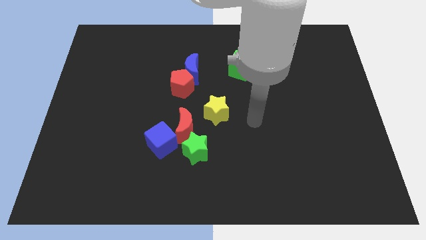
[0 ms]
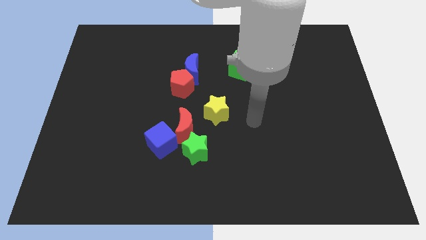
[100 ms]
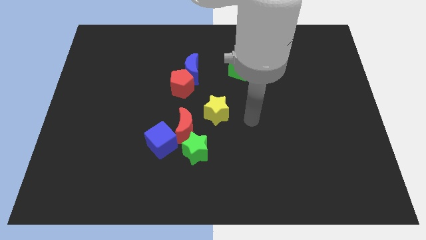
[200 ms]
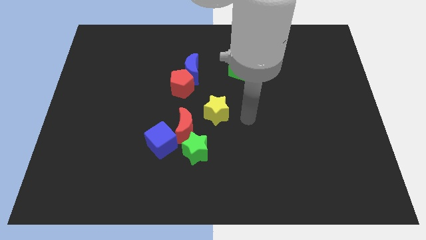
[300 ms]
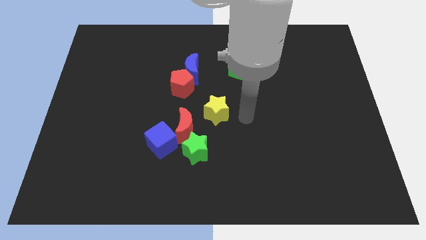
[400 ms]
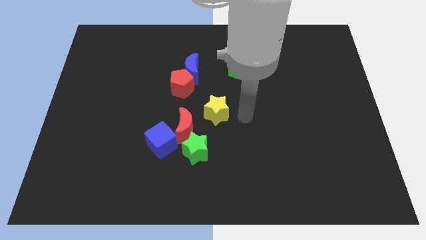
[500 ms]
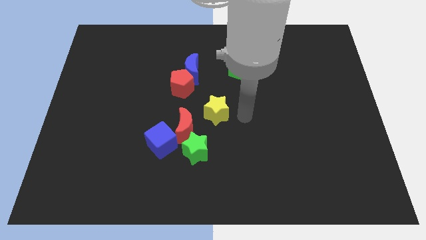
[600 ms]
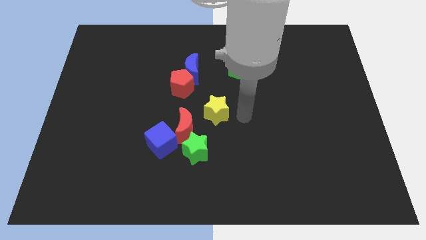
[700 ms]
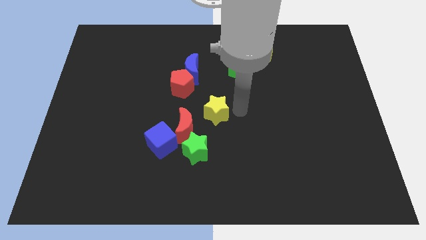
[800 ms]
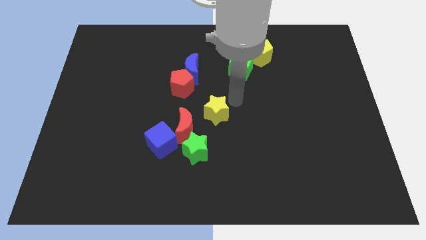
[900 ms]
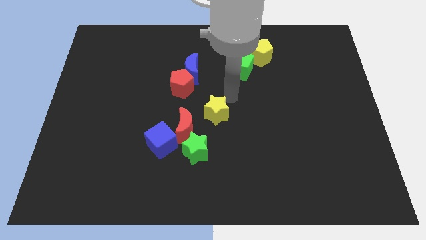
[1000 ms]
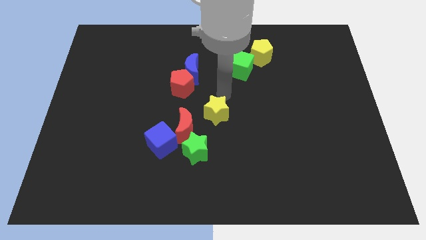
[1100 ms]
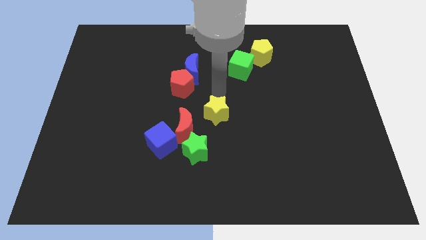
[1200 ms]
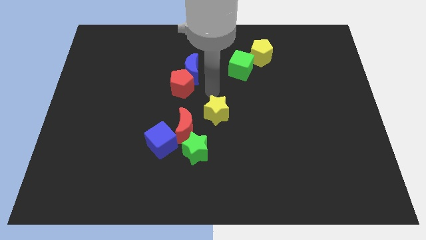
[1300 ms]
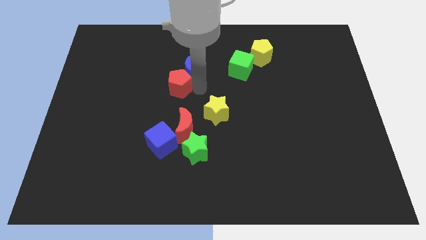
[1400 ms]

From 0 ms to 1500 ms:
tap the red pentagon

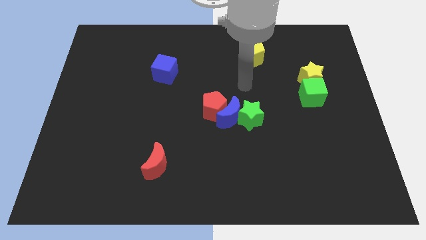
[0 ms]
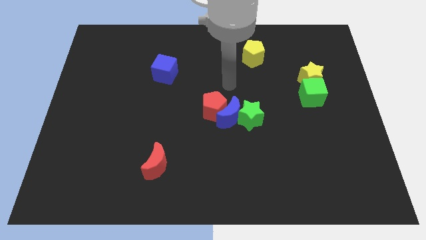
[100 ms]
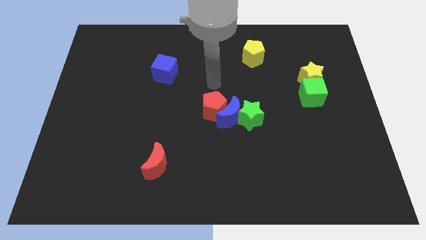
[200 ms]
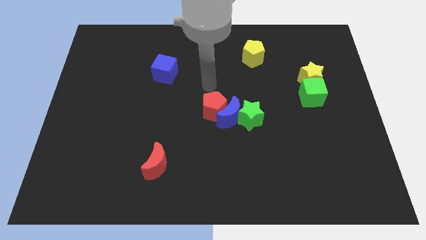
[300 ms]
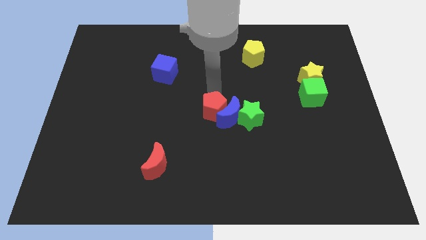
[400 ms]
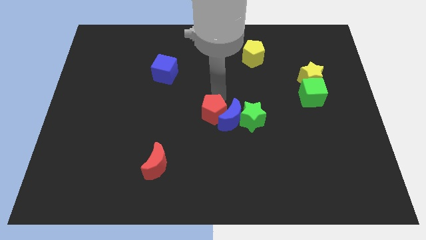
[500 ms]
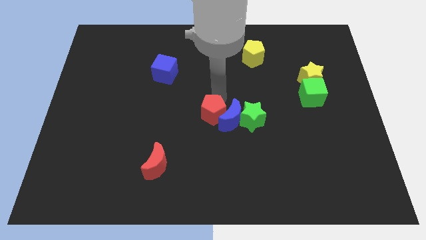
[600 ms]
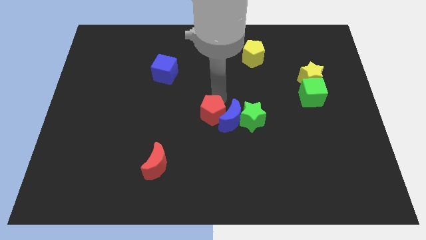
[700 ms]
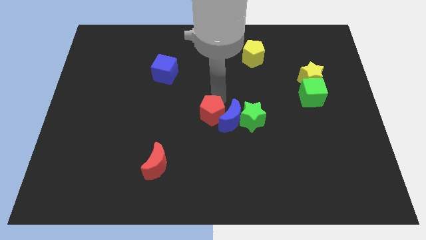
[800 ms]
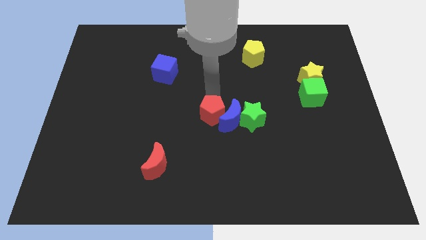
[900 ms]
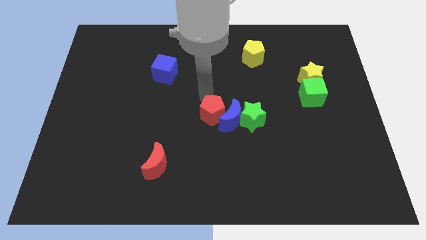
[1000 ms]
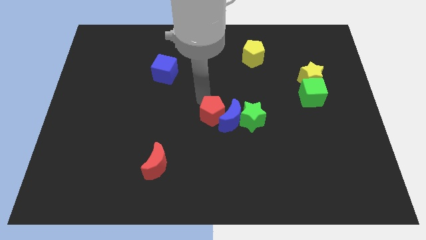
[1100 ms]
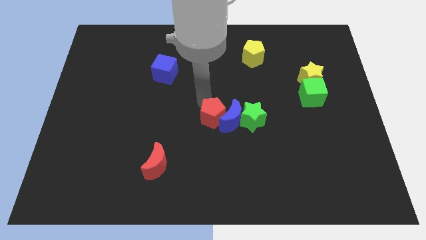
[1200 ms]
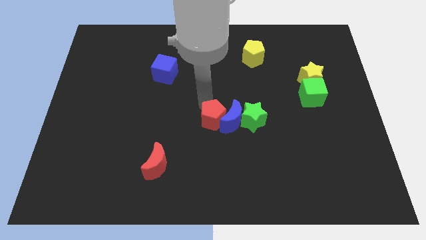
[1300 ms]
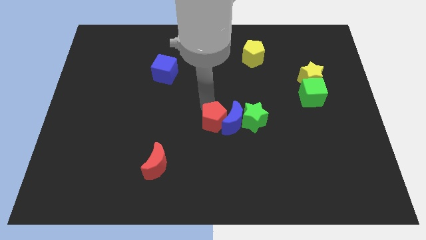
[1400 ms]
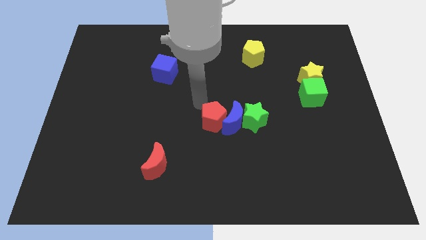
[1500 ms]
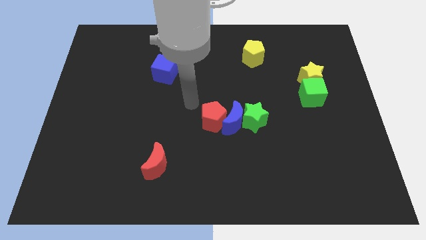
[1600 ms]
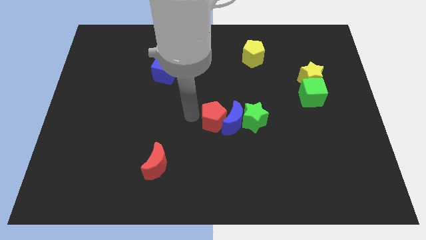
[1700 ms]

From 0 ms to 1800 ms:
move the red pentagon towards down

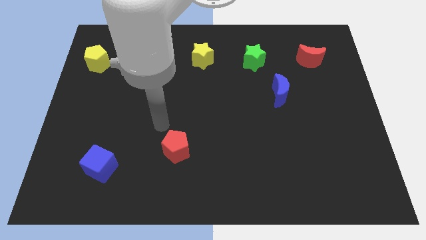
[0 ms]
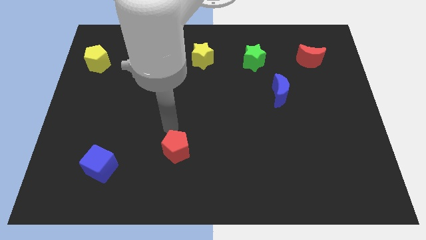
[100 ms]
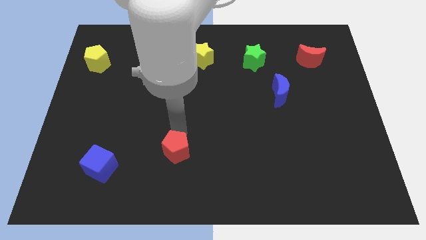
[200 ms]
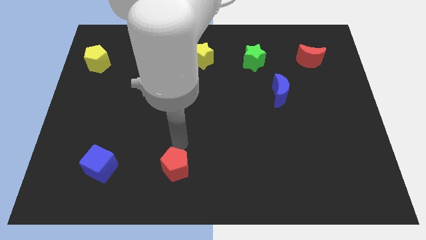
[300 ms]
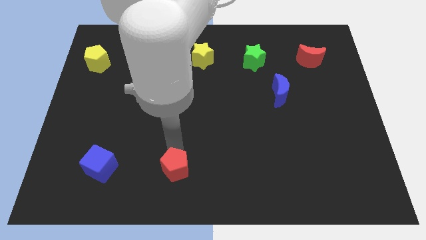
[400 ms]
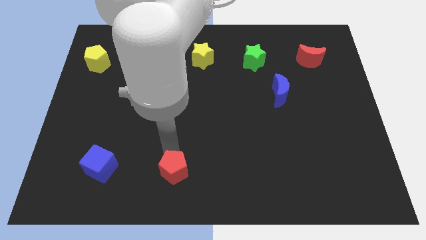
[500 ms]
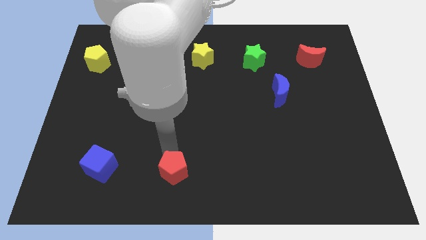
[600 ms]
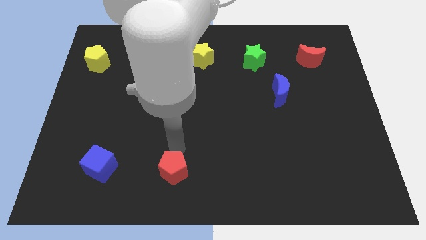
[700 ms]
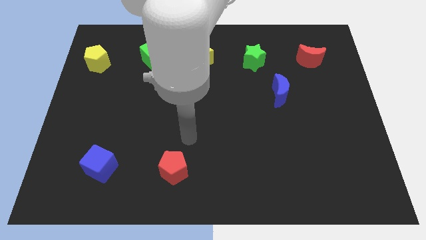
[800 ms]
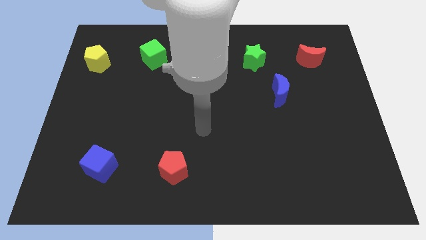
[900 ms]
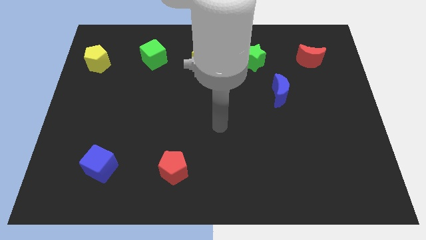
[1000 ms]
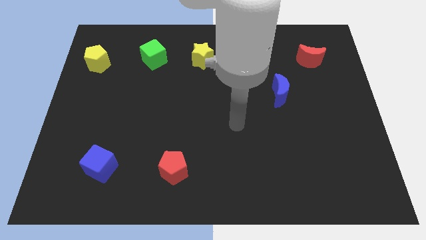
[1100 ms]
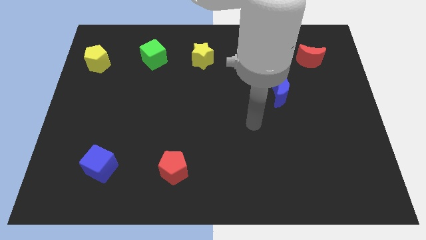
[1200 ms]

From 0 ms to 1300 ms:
slide the red pentagon to the right of the blue cube

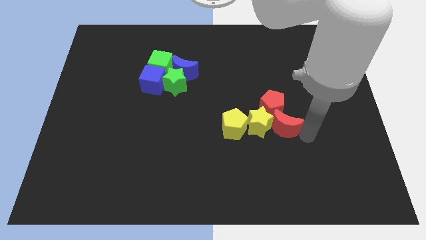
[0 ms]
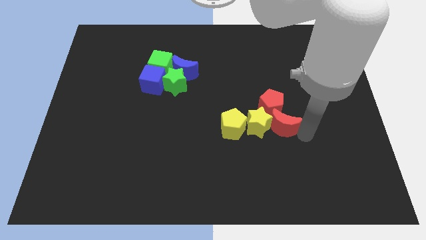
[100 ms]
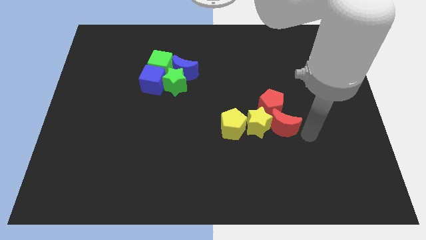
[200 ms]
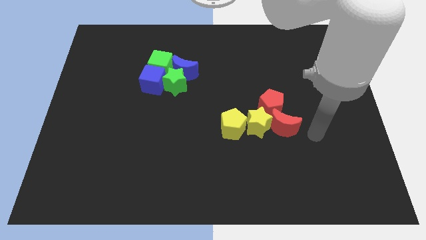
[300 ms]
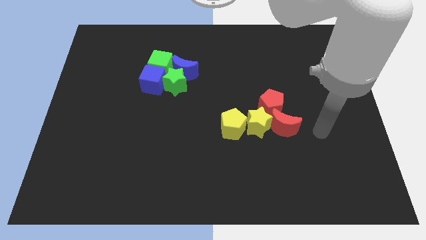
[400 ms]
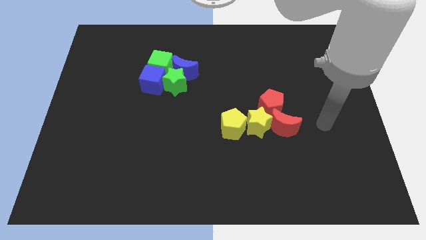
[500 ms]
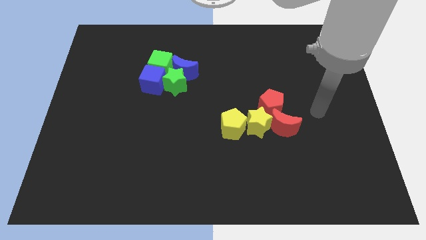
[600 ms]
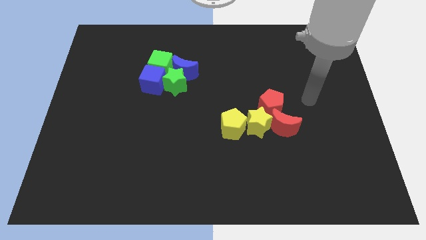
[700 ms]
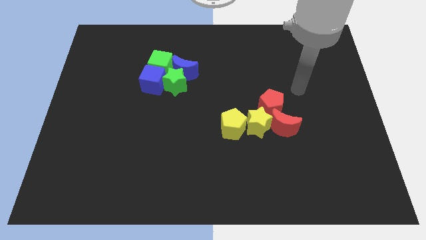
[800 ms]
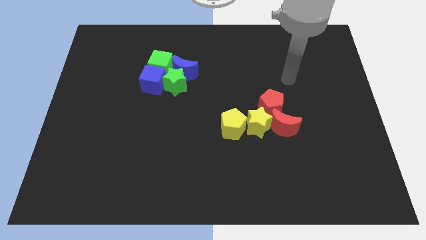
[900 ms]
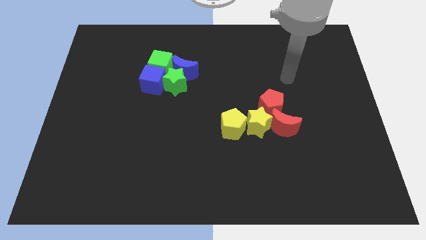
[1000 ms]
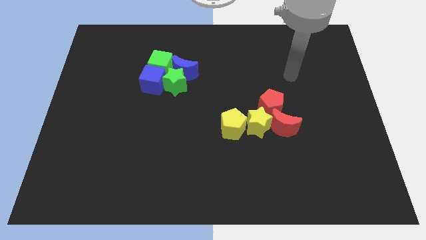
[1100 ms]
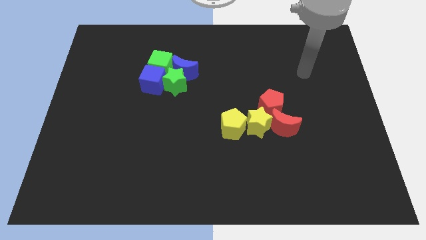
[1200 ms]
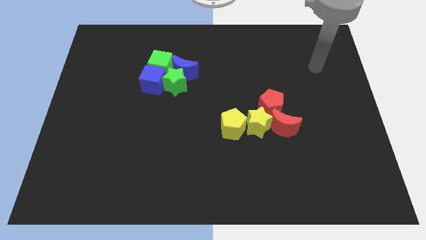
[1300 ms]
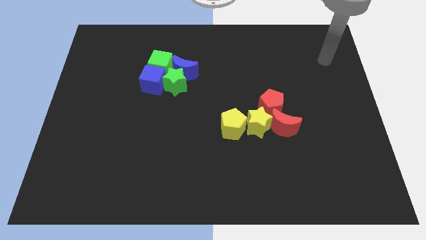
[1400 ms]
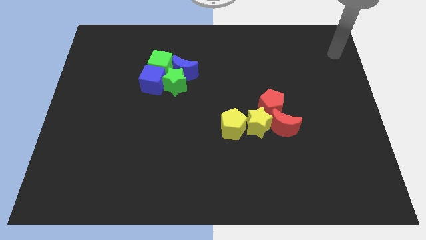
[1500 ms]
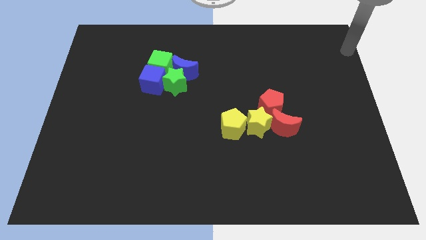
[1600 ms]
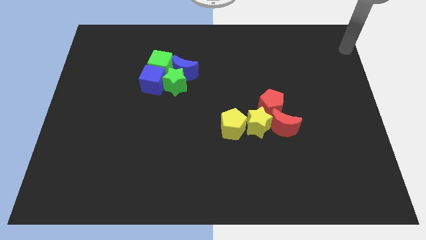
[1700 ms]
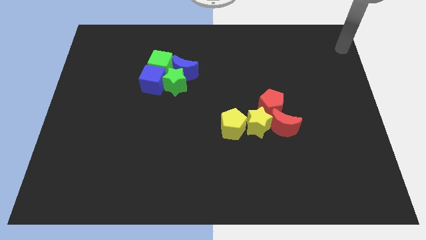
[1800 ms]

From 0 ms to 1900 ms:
move your arm towards the top right

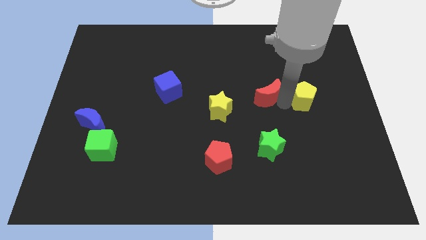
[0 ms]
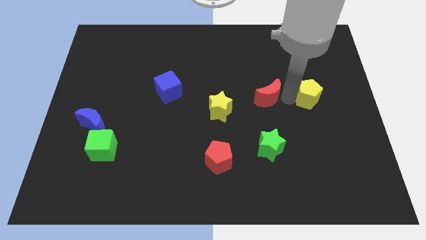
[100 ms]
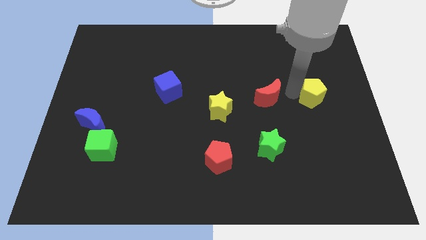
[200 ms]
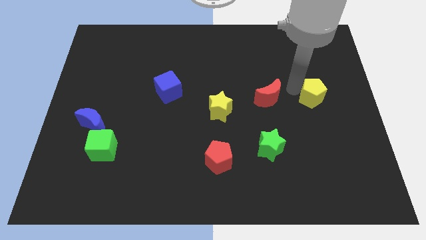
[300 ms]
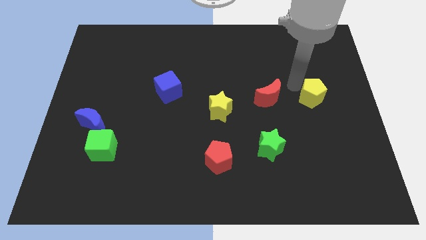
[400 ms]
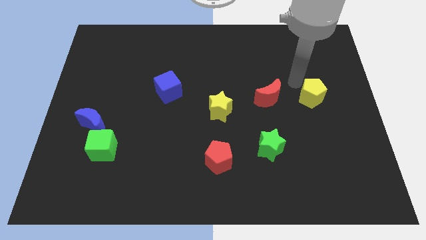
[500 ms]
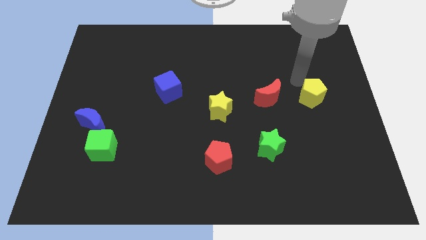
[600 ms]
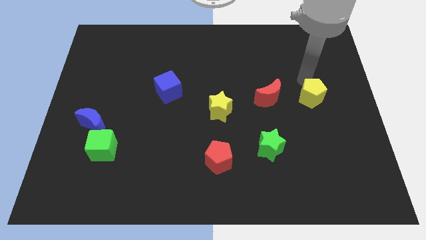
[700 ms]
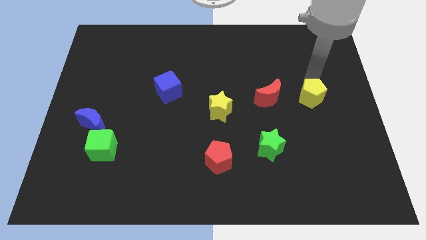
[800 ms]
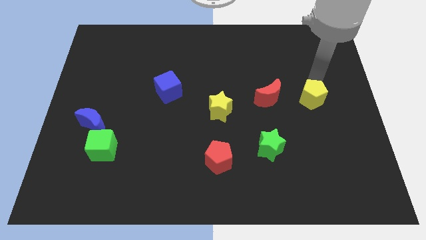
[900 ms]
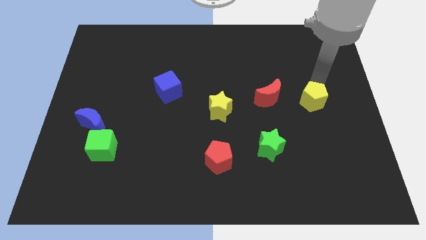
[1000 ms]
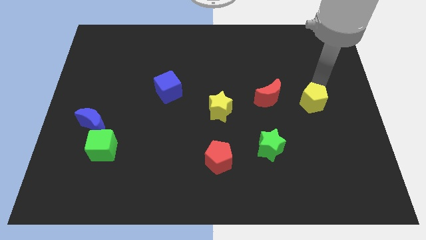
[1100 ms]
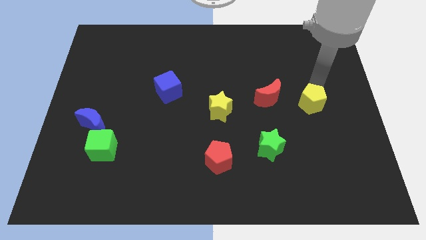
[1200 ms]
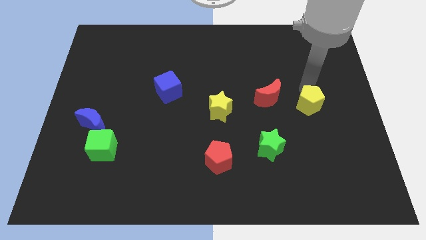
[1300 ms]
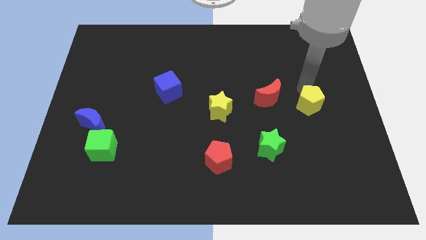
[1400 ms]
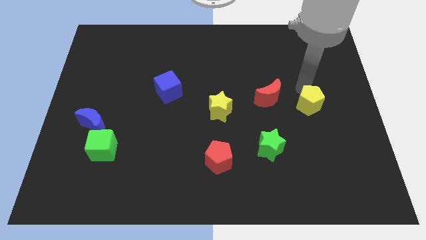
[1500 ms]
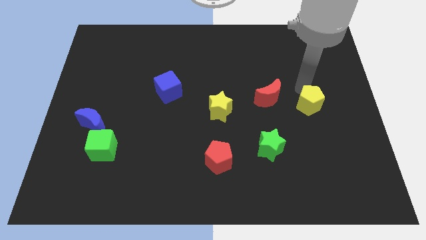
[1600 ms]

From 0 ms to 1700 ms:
push the yellow pentagon towards the right of the board

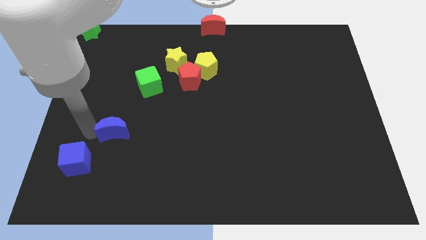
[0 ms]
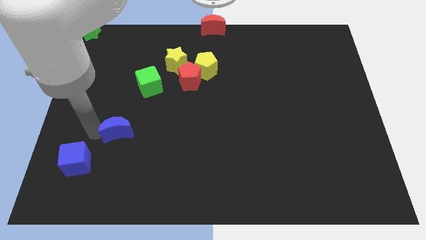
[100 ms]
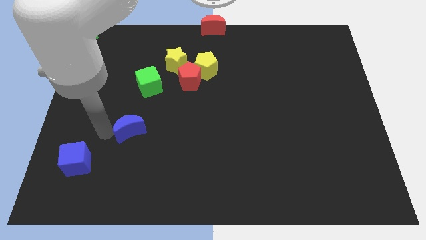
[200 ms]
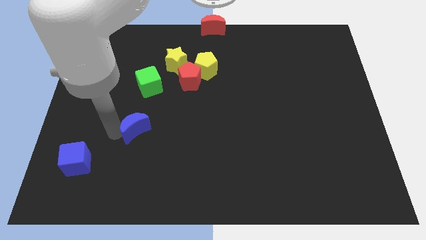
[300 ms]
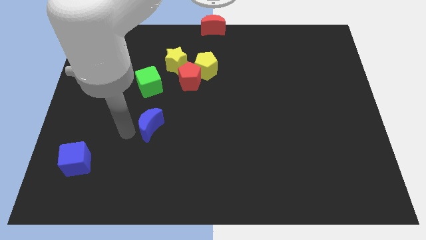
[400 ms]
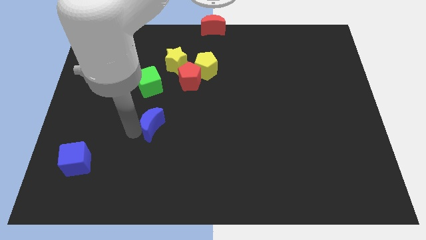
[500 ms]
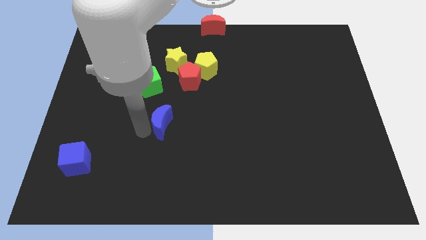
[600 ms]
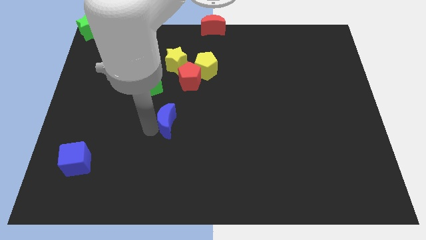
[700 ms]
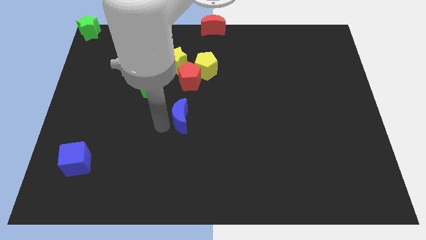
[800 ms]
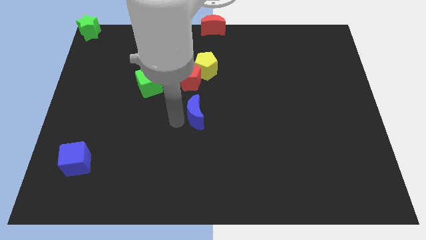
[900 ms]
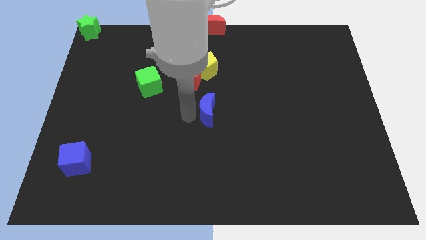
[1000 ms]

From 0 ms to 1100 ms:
place the blue moon below the red pentagon
